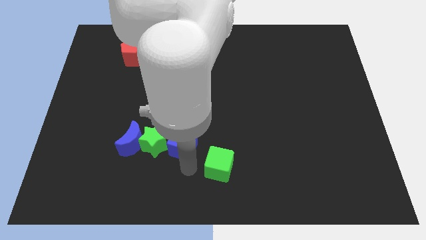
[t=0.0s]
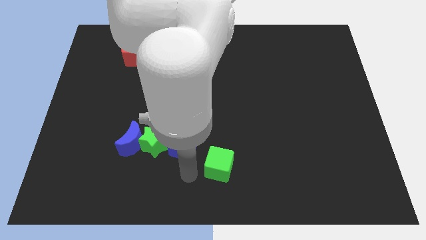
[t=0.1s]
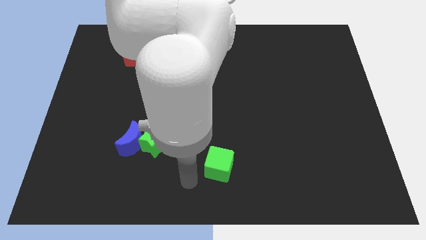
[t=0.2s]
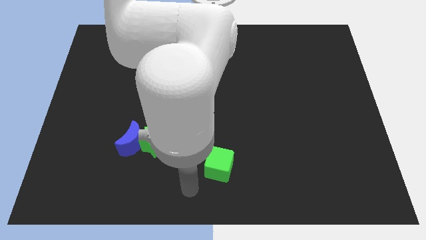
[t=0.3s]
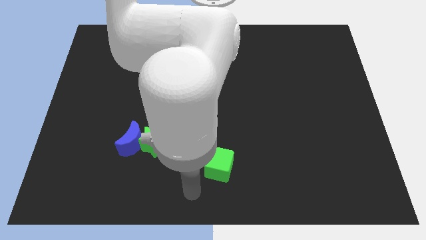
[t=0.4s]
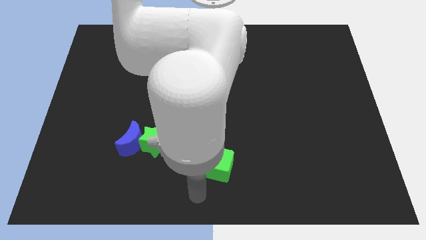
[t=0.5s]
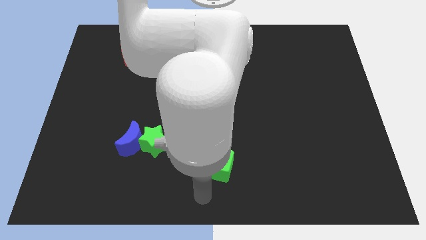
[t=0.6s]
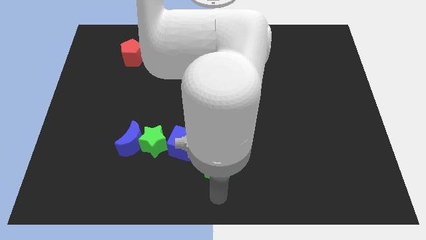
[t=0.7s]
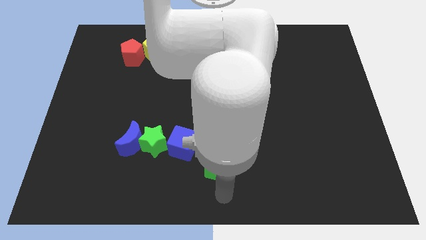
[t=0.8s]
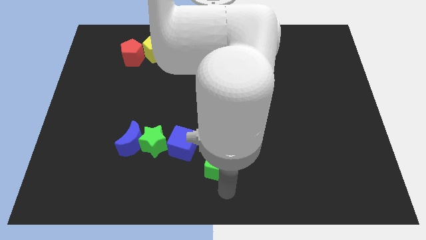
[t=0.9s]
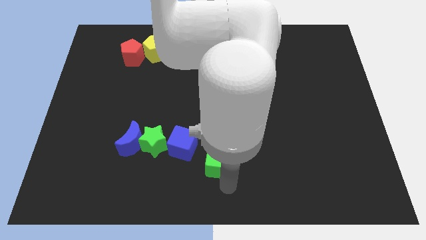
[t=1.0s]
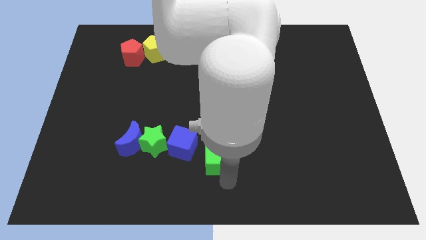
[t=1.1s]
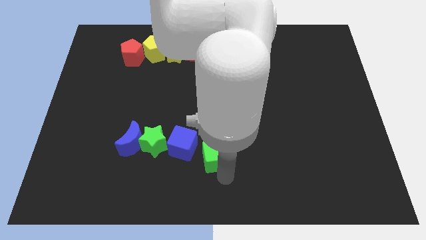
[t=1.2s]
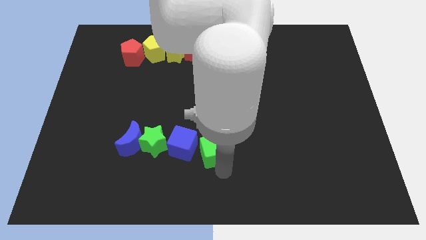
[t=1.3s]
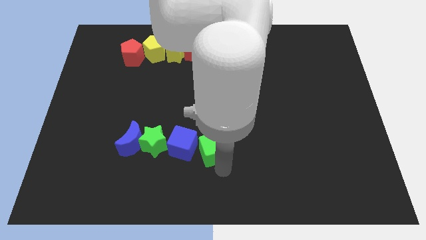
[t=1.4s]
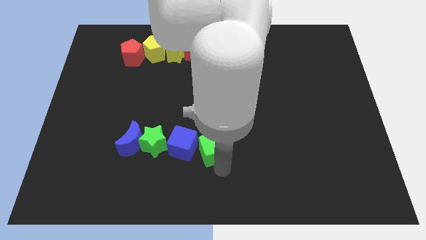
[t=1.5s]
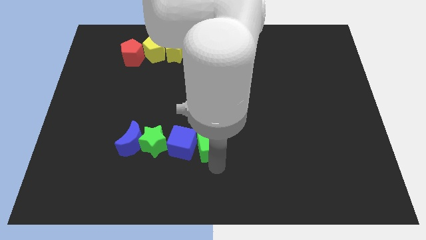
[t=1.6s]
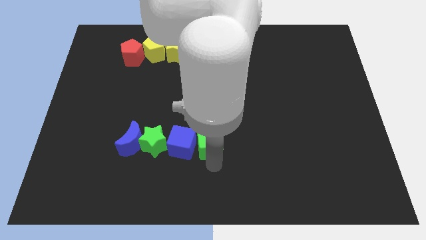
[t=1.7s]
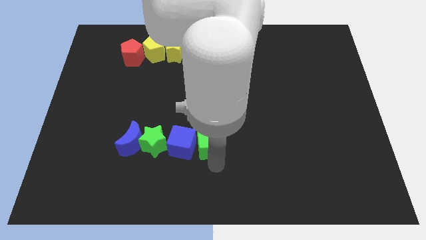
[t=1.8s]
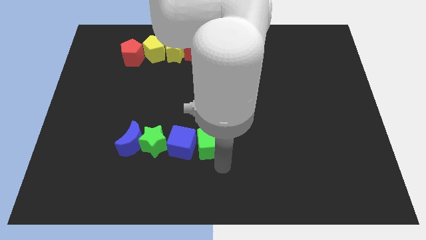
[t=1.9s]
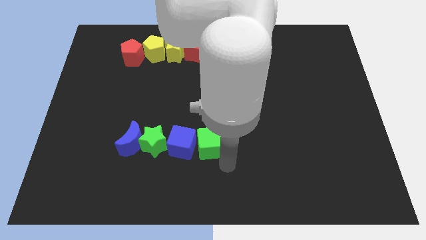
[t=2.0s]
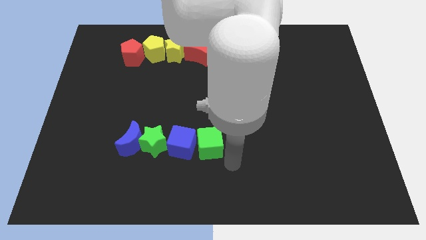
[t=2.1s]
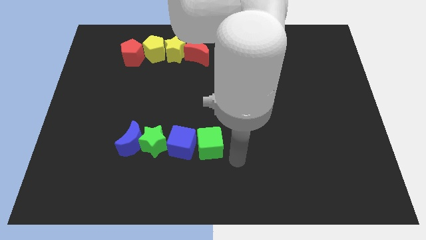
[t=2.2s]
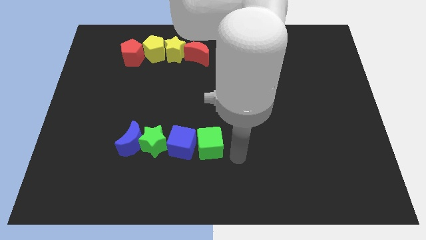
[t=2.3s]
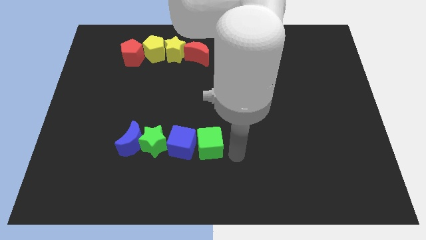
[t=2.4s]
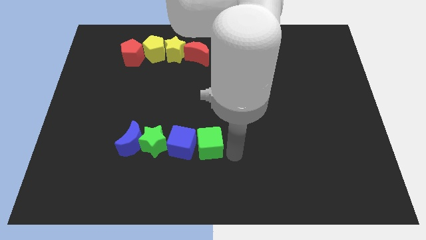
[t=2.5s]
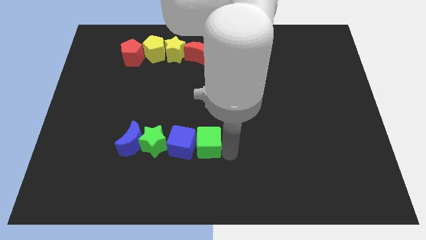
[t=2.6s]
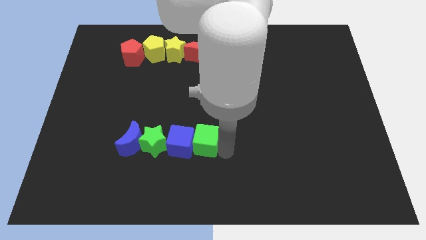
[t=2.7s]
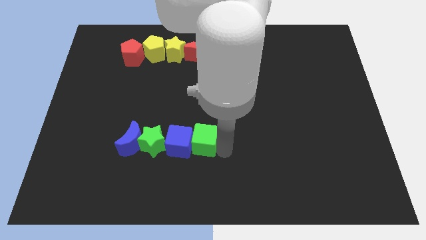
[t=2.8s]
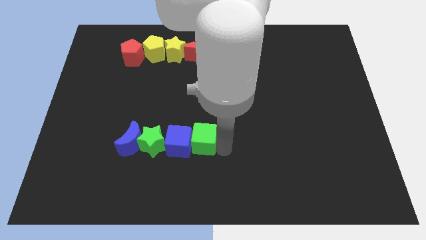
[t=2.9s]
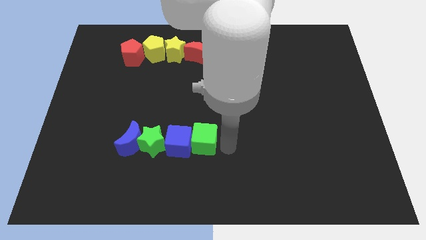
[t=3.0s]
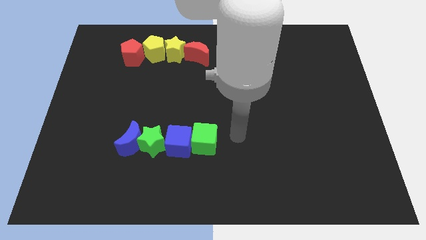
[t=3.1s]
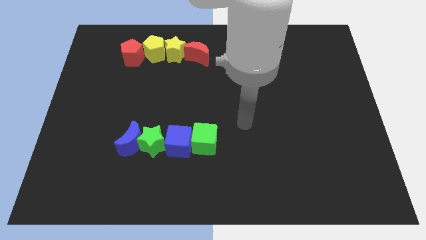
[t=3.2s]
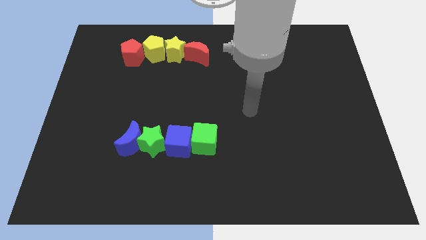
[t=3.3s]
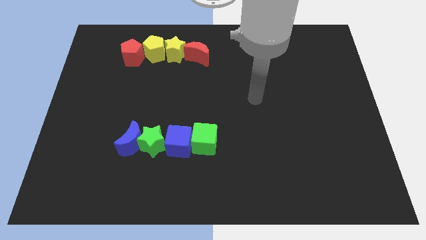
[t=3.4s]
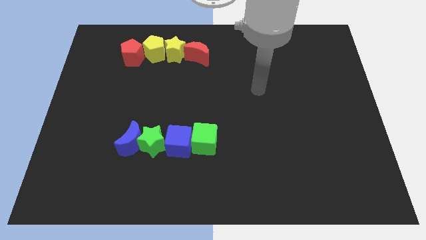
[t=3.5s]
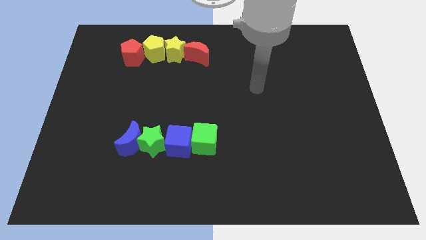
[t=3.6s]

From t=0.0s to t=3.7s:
push the green cube to the right in a horizontal line beside blue cube

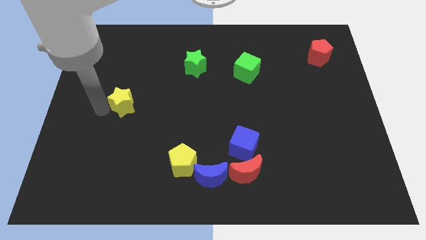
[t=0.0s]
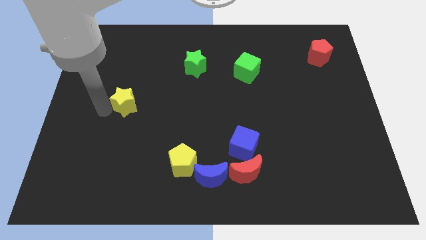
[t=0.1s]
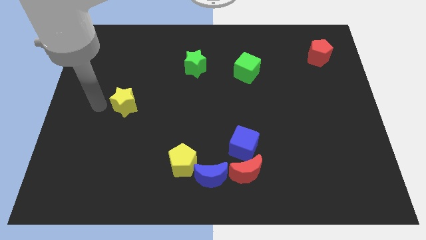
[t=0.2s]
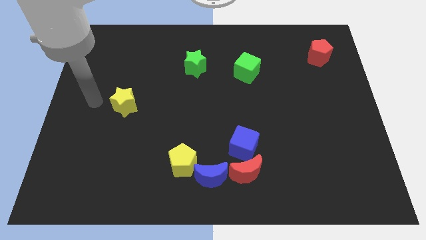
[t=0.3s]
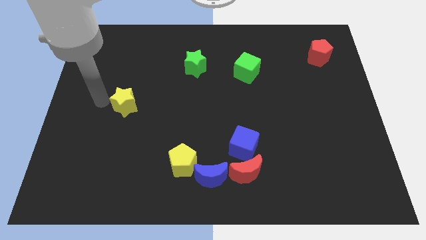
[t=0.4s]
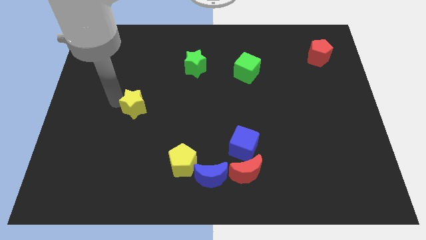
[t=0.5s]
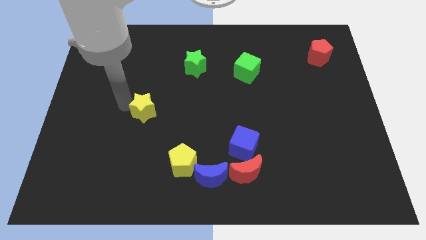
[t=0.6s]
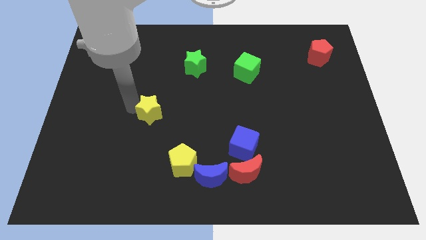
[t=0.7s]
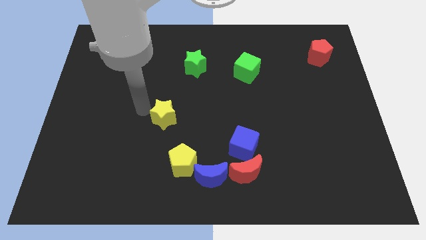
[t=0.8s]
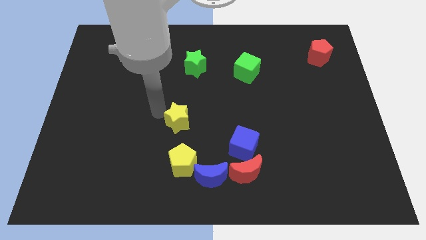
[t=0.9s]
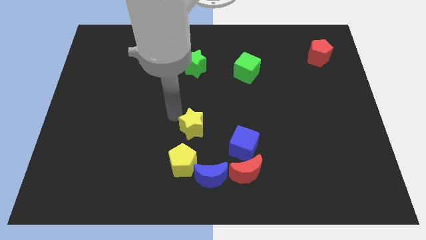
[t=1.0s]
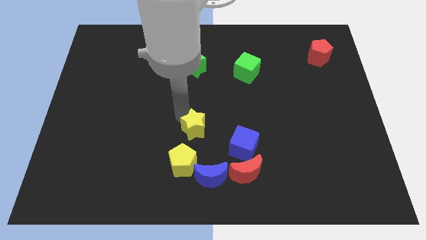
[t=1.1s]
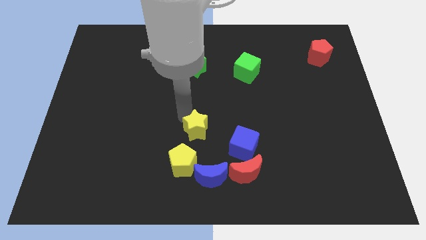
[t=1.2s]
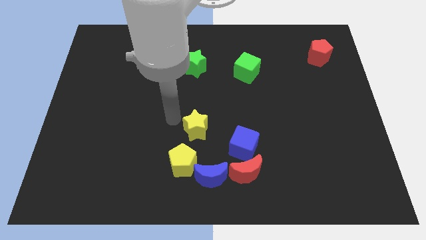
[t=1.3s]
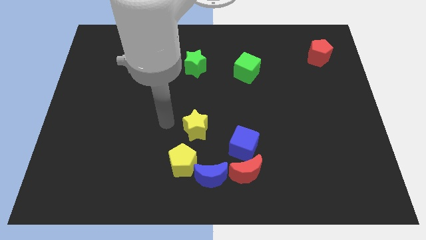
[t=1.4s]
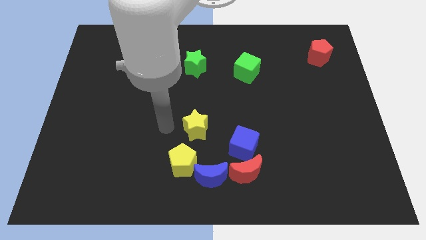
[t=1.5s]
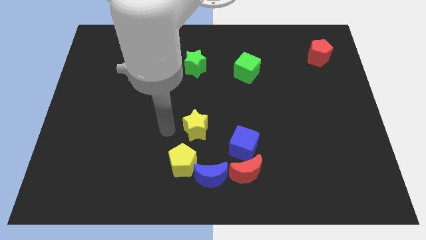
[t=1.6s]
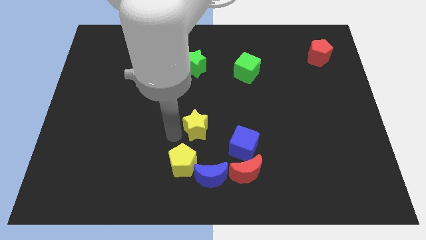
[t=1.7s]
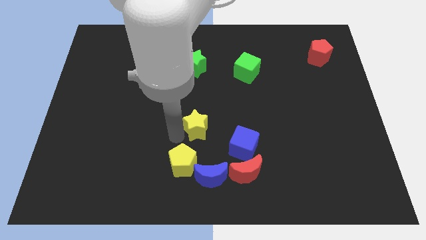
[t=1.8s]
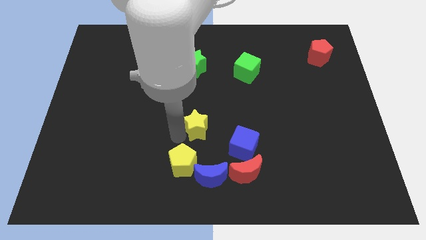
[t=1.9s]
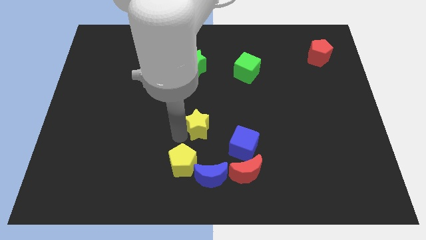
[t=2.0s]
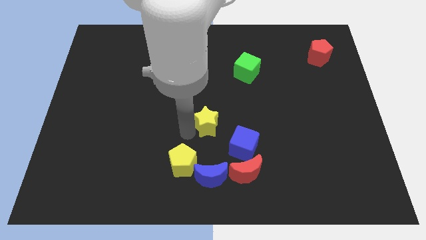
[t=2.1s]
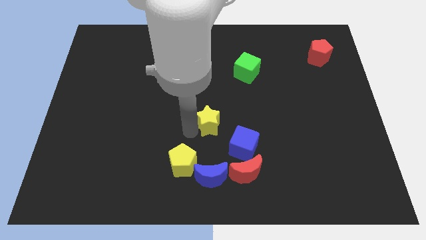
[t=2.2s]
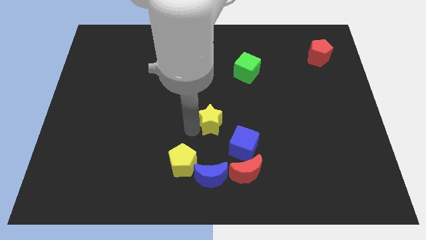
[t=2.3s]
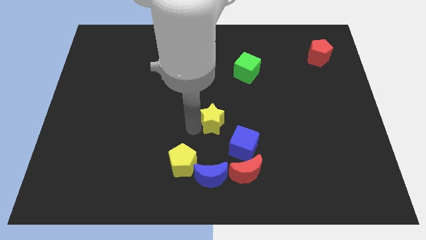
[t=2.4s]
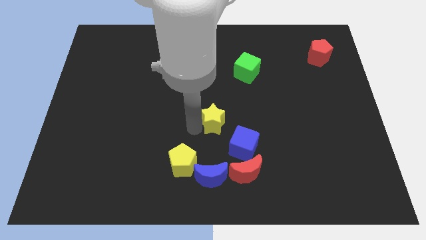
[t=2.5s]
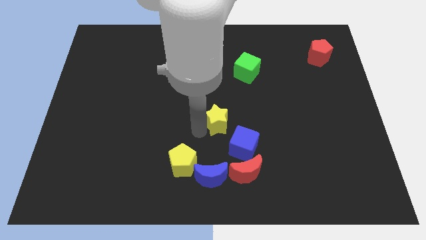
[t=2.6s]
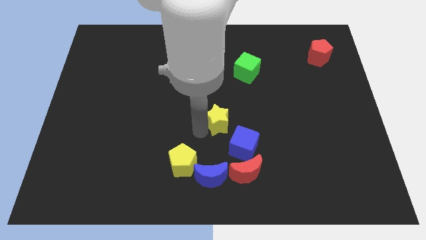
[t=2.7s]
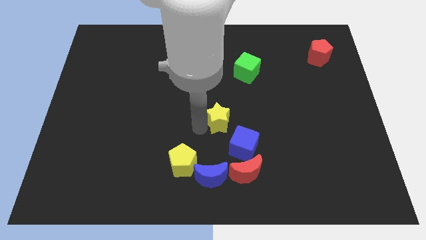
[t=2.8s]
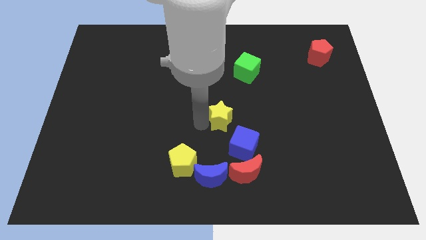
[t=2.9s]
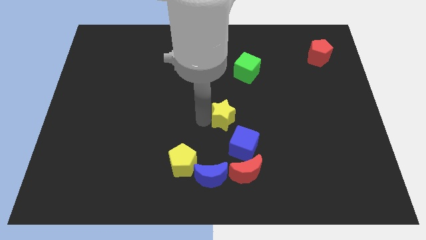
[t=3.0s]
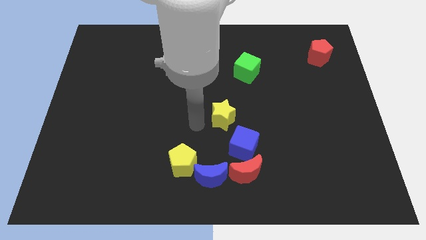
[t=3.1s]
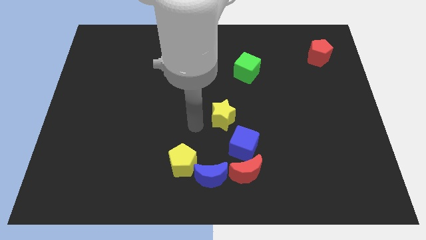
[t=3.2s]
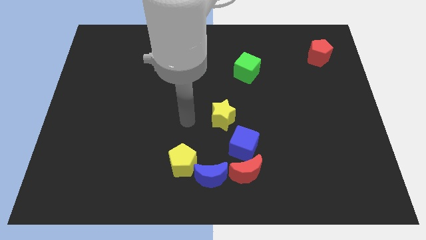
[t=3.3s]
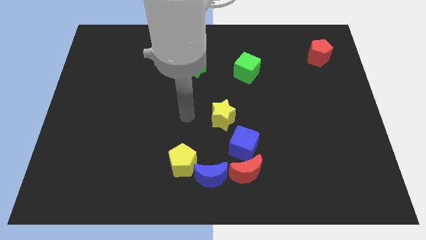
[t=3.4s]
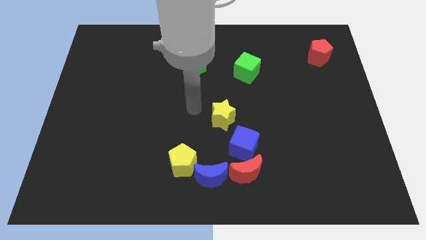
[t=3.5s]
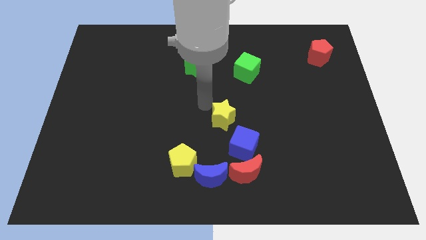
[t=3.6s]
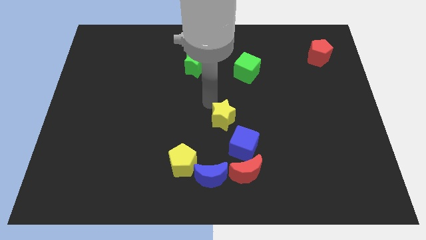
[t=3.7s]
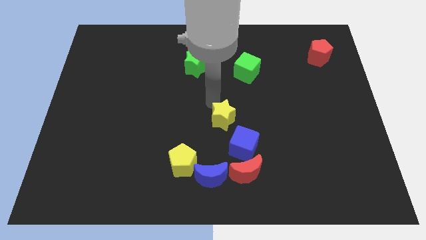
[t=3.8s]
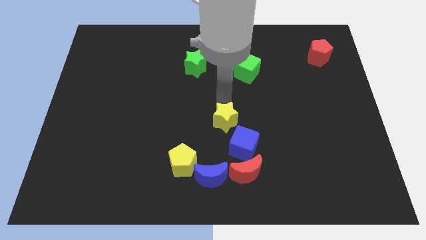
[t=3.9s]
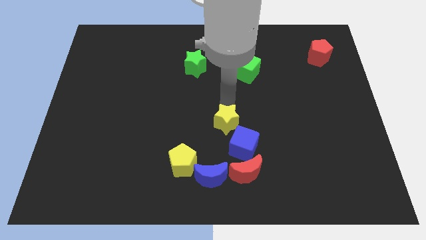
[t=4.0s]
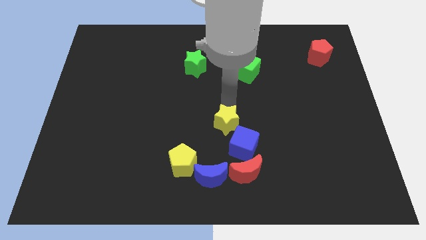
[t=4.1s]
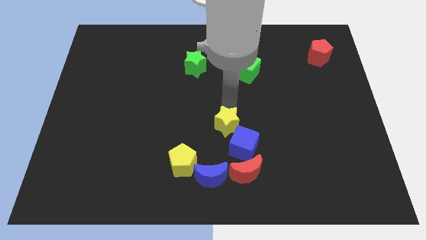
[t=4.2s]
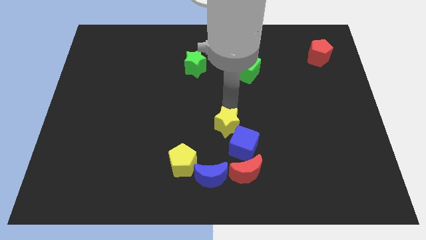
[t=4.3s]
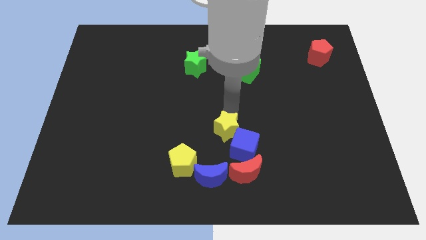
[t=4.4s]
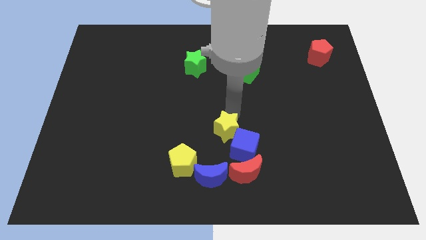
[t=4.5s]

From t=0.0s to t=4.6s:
push the yellow star beside the blue cube

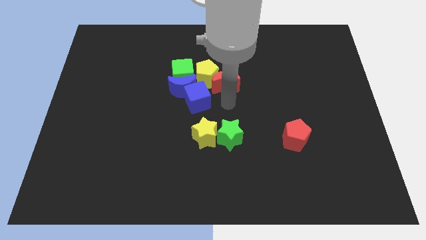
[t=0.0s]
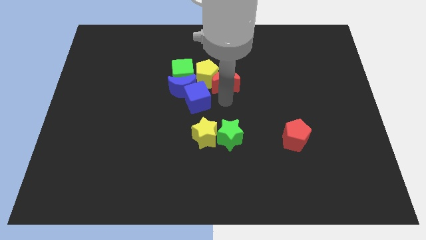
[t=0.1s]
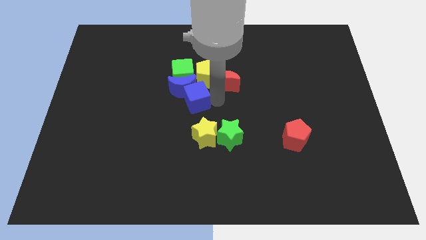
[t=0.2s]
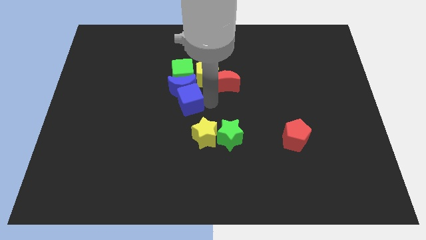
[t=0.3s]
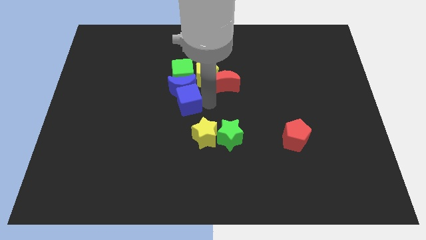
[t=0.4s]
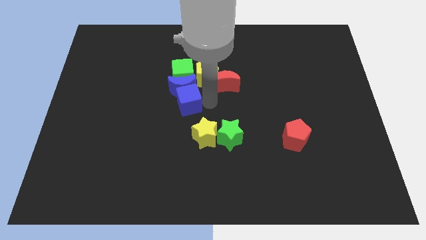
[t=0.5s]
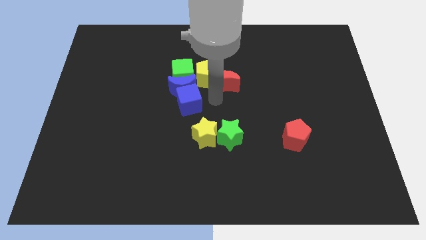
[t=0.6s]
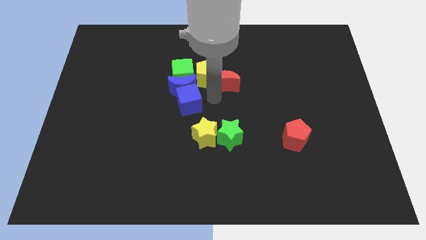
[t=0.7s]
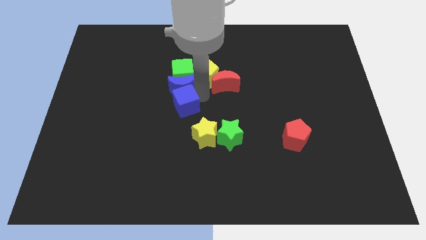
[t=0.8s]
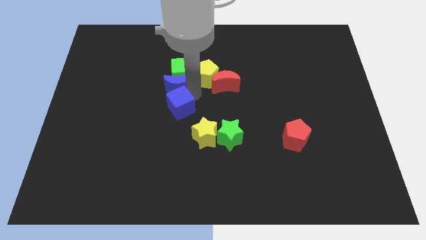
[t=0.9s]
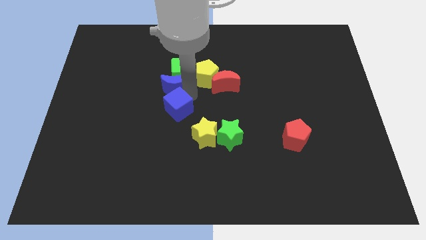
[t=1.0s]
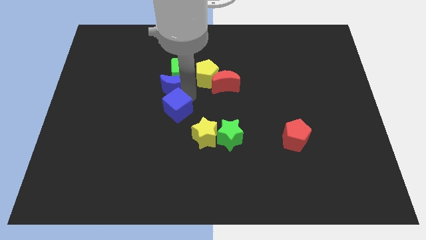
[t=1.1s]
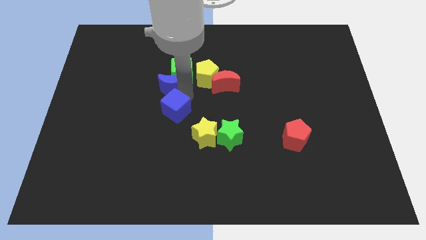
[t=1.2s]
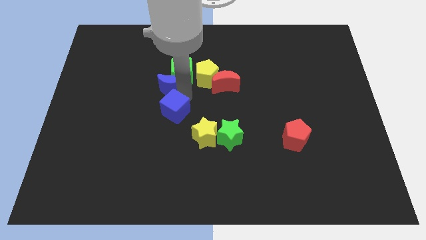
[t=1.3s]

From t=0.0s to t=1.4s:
push the blue cube under the blue crescent
